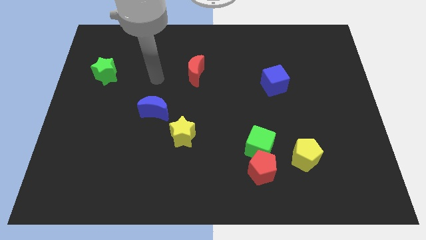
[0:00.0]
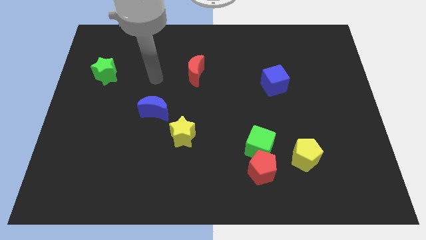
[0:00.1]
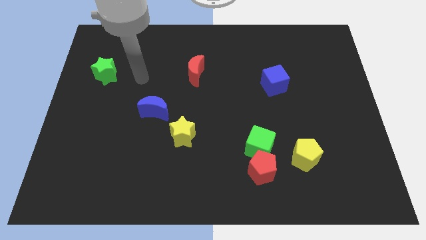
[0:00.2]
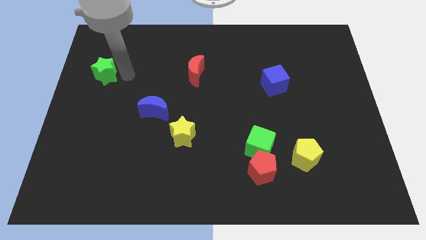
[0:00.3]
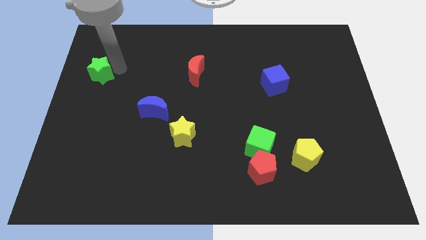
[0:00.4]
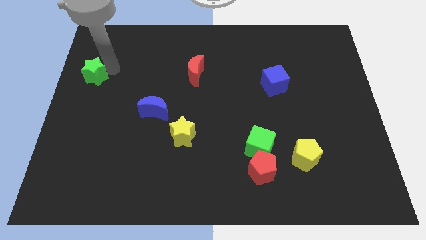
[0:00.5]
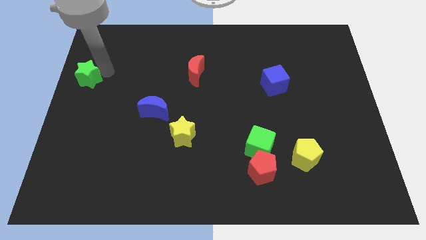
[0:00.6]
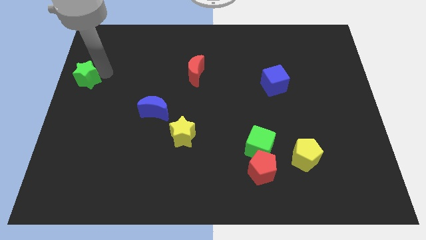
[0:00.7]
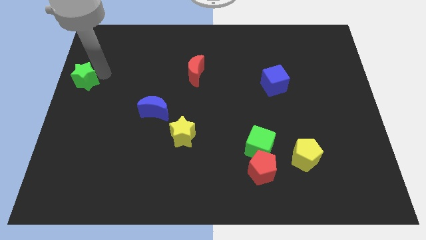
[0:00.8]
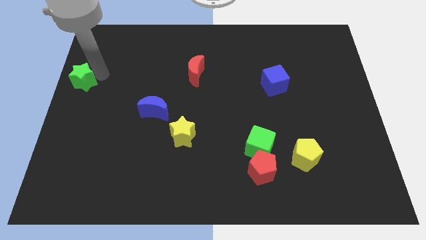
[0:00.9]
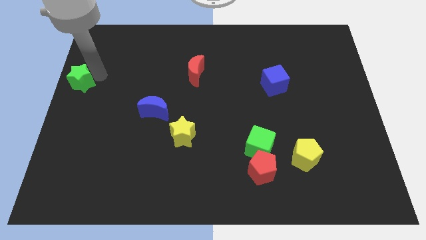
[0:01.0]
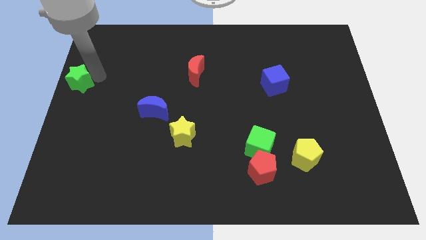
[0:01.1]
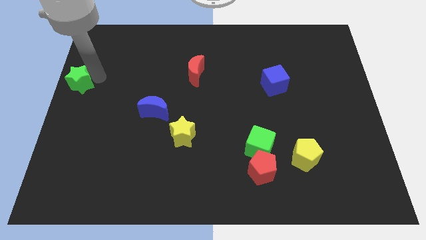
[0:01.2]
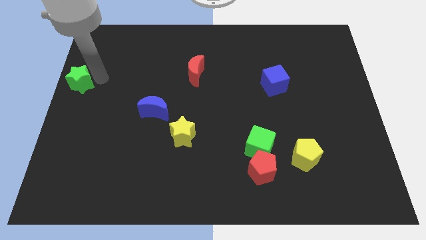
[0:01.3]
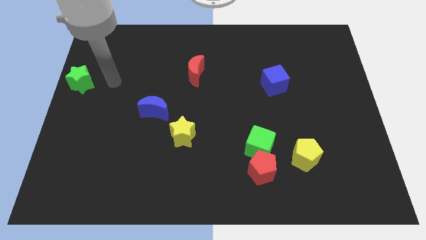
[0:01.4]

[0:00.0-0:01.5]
push the green star towards the center left

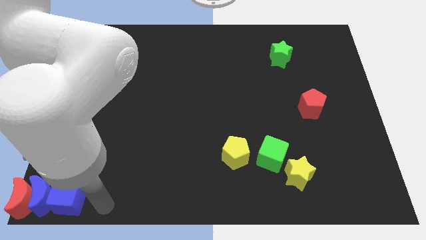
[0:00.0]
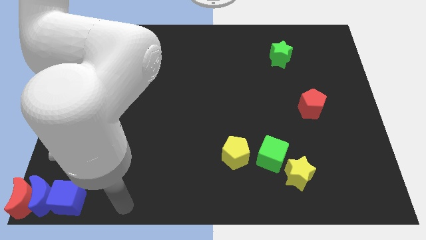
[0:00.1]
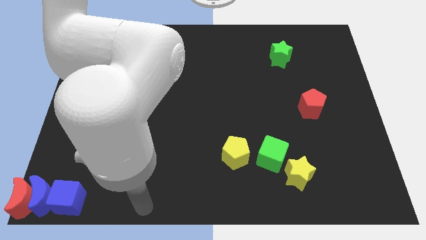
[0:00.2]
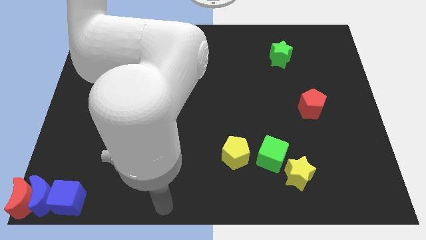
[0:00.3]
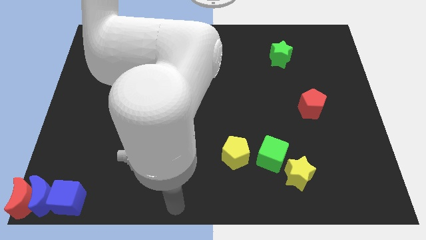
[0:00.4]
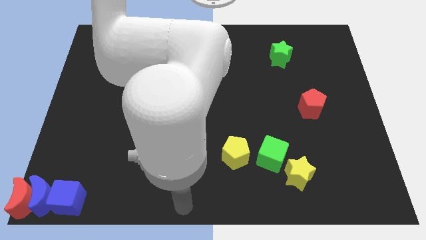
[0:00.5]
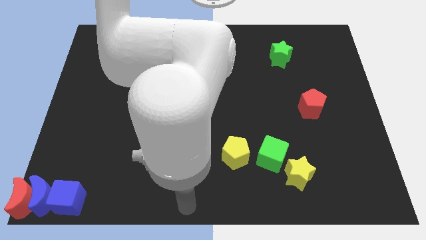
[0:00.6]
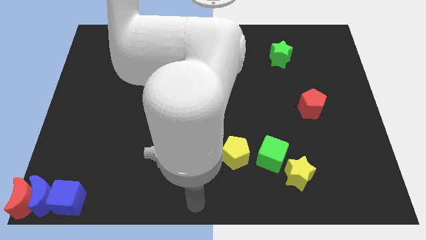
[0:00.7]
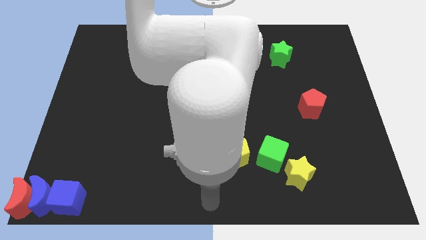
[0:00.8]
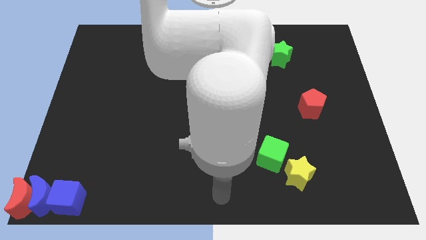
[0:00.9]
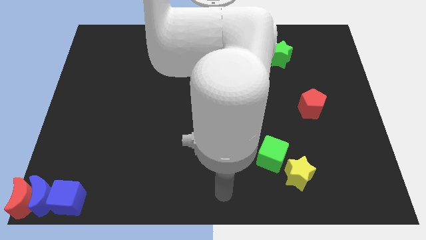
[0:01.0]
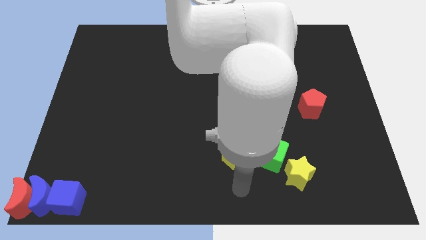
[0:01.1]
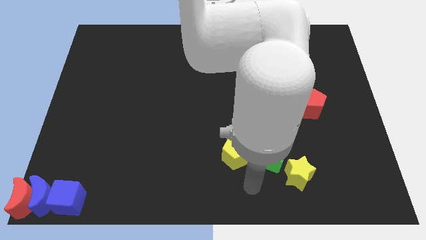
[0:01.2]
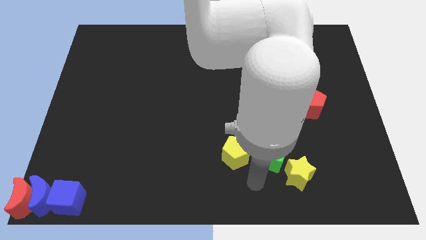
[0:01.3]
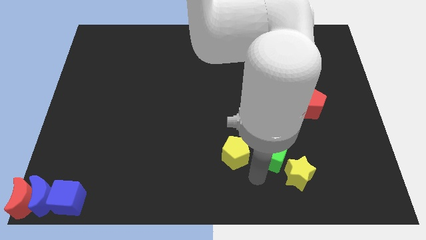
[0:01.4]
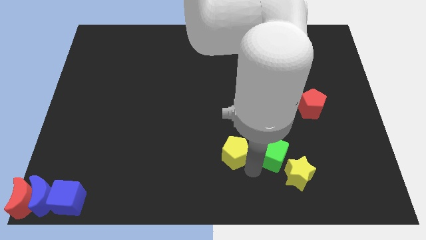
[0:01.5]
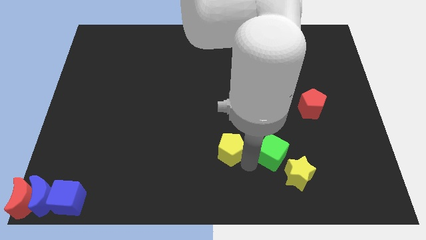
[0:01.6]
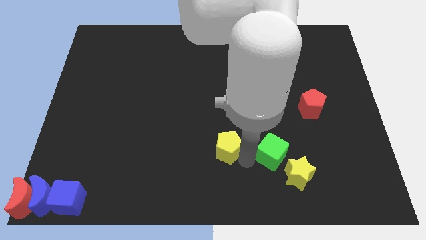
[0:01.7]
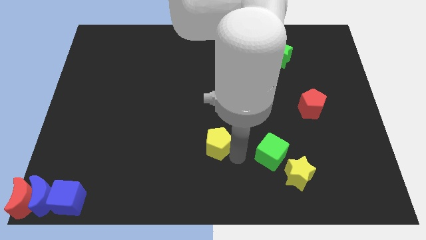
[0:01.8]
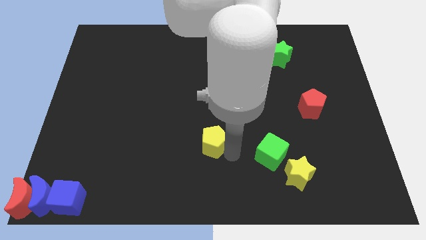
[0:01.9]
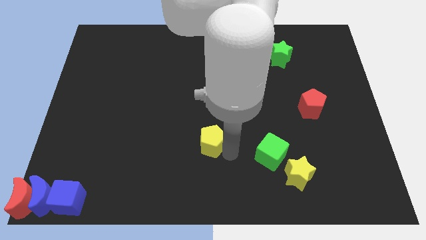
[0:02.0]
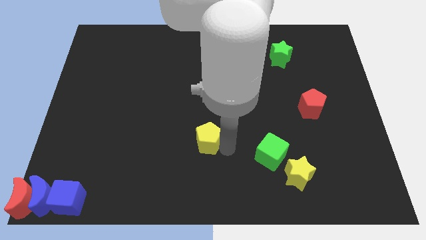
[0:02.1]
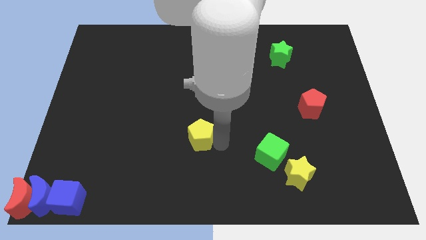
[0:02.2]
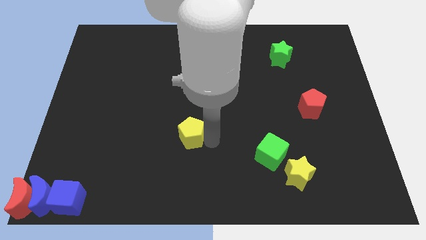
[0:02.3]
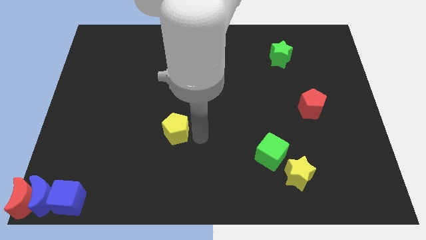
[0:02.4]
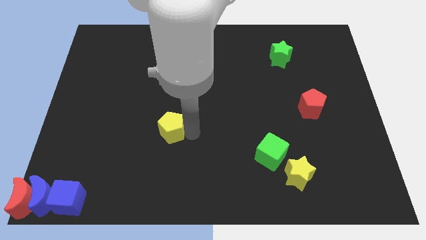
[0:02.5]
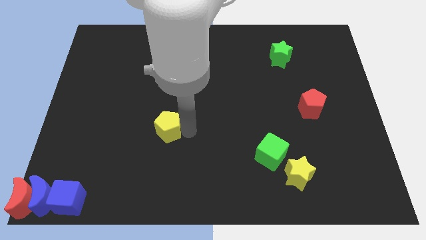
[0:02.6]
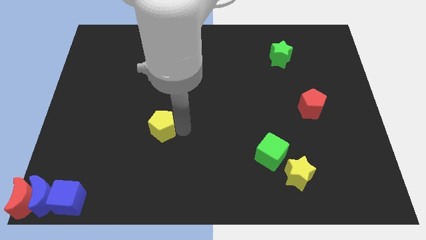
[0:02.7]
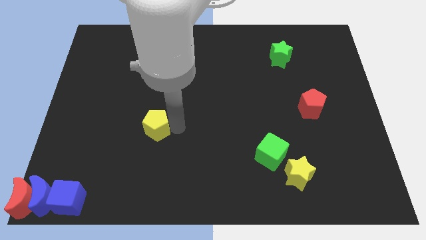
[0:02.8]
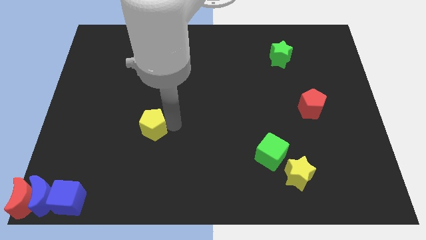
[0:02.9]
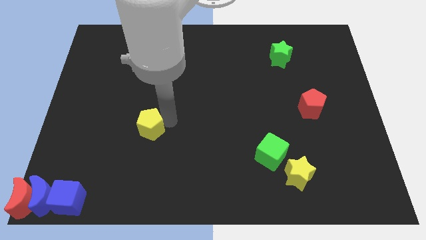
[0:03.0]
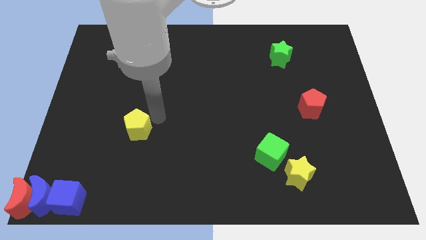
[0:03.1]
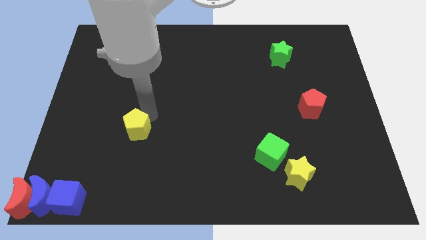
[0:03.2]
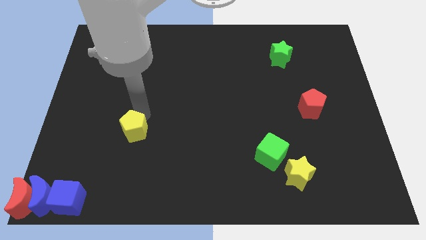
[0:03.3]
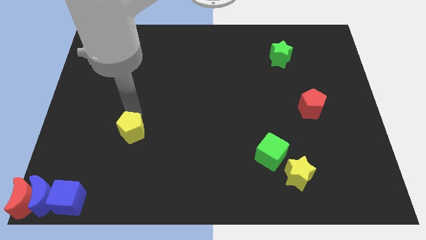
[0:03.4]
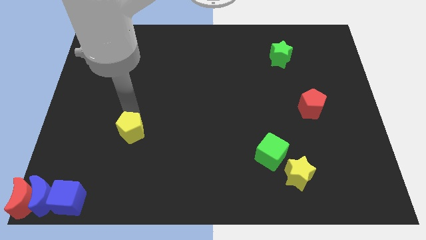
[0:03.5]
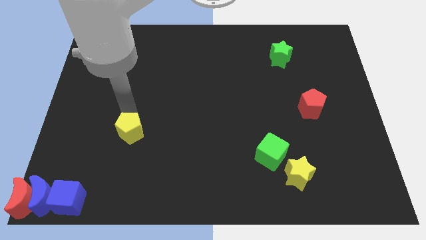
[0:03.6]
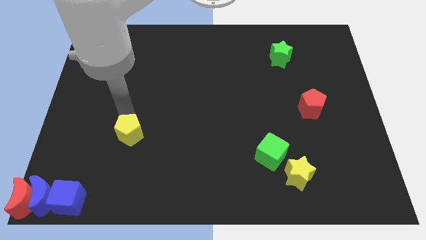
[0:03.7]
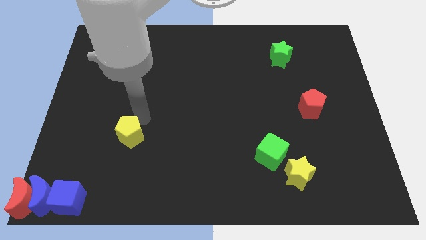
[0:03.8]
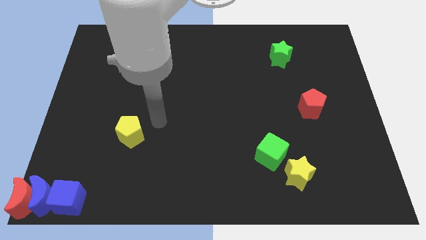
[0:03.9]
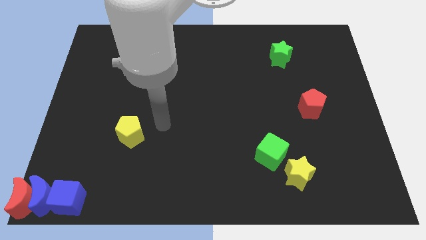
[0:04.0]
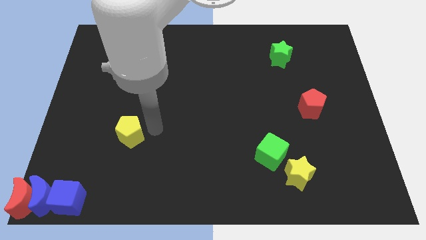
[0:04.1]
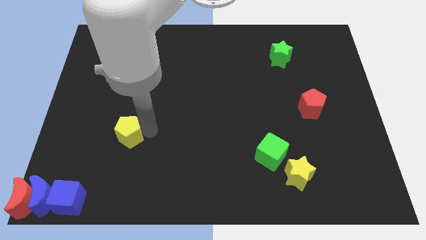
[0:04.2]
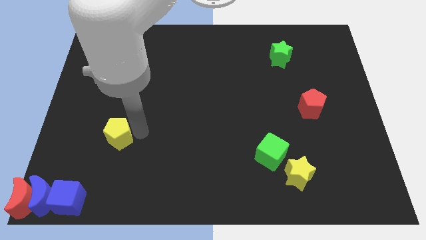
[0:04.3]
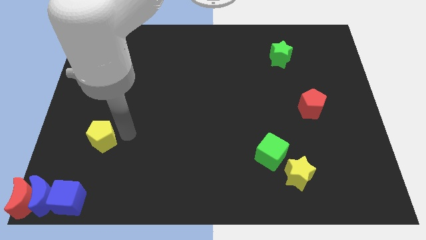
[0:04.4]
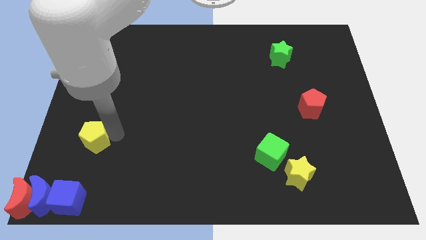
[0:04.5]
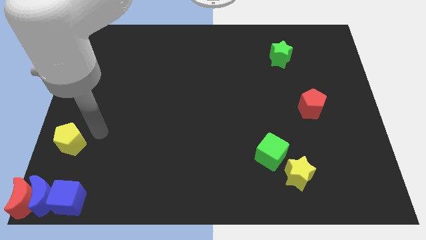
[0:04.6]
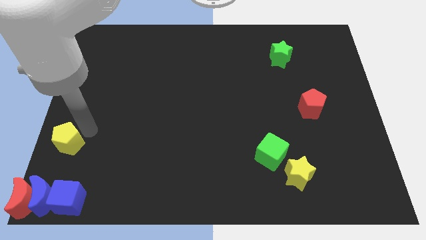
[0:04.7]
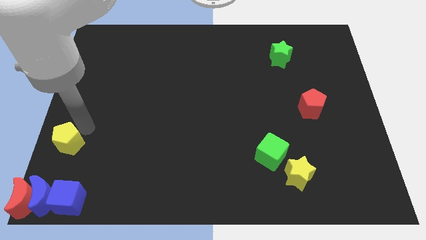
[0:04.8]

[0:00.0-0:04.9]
move the yellow pentagon vertically above the blue cube

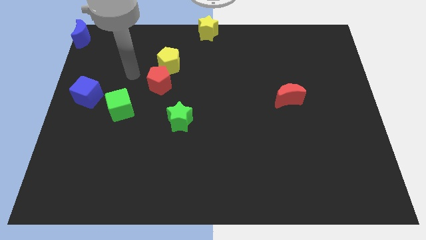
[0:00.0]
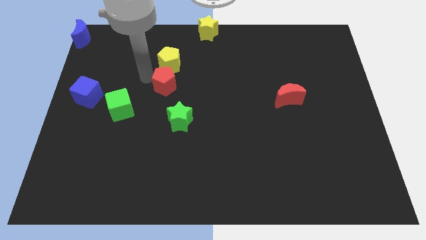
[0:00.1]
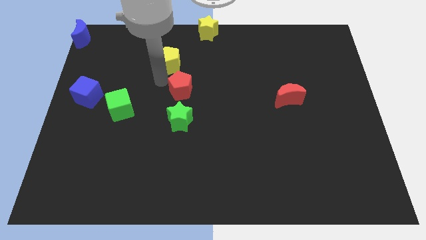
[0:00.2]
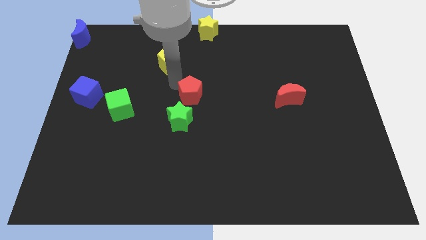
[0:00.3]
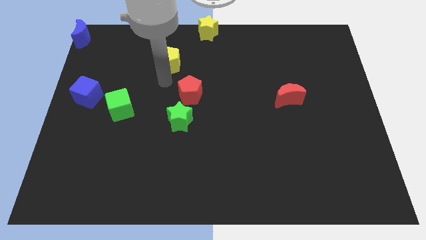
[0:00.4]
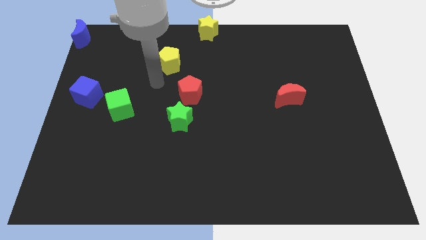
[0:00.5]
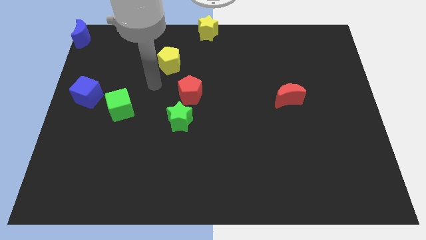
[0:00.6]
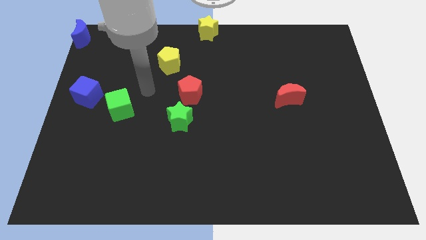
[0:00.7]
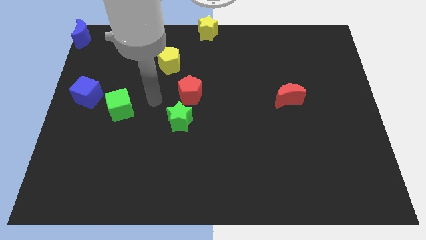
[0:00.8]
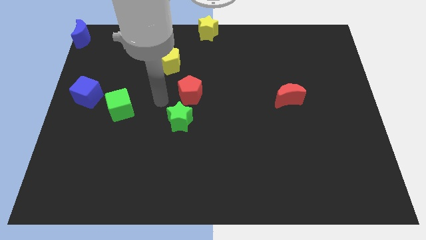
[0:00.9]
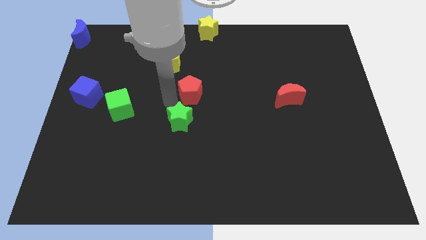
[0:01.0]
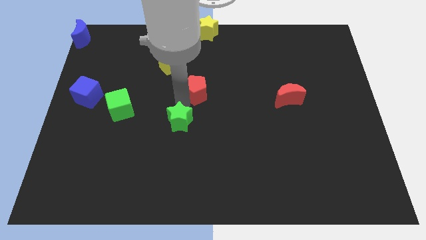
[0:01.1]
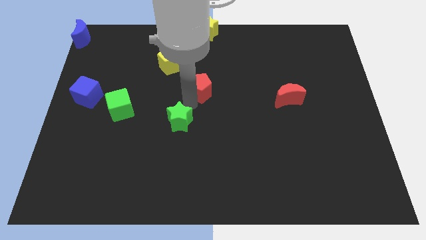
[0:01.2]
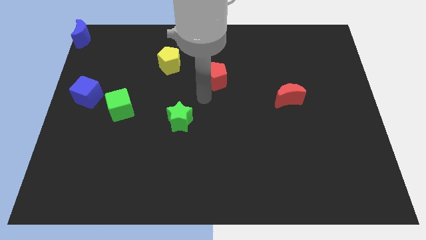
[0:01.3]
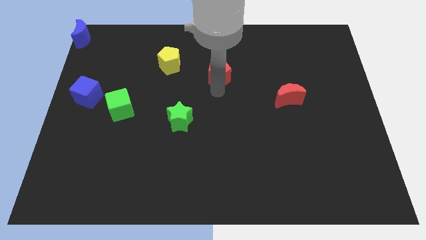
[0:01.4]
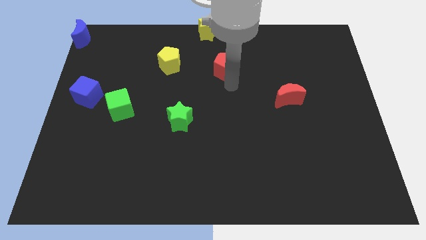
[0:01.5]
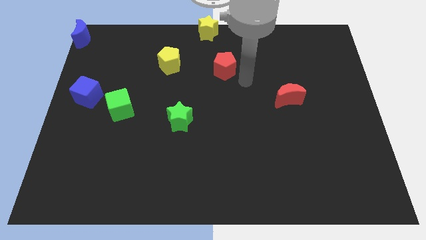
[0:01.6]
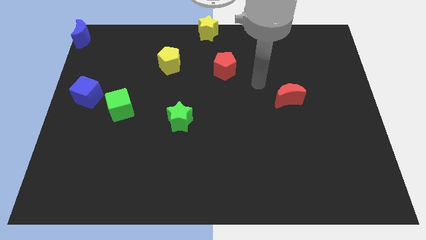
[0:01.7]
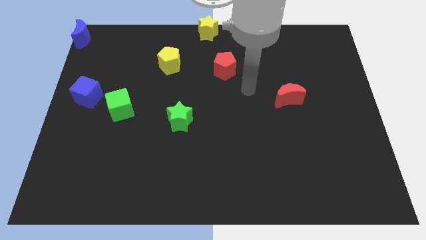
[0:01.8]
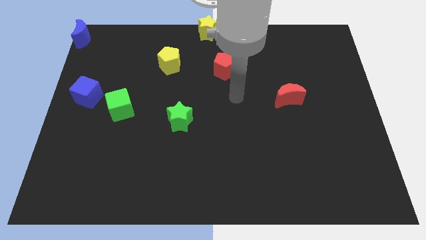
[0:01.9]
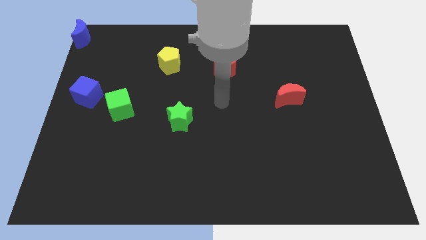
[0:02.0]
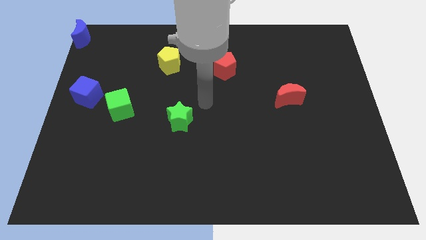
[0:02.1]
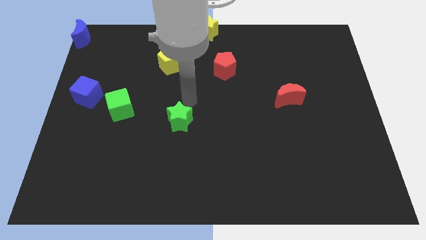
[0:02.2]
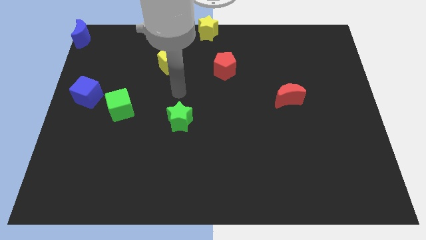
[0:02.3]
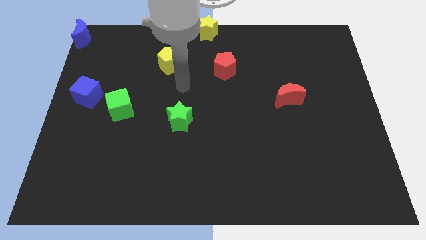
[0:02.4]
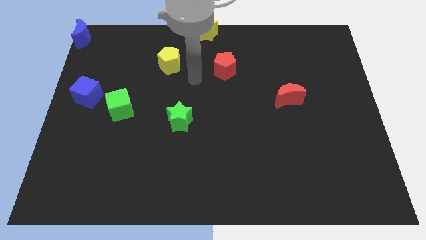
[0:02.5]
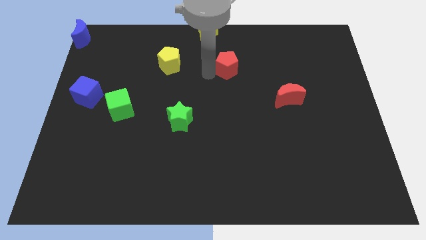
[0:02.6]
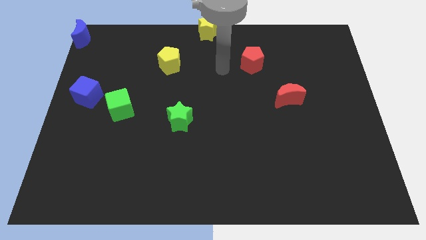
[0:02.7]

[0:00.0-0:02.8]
place the red pentagon to the right of the yellow pentagon
